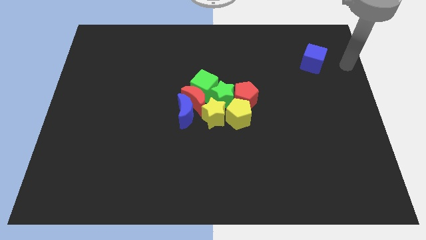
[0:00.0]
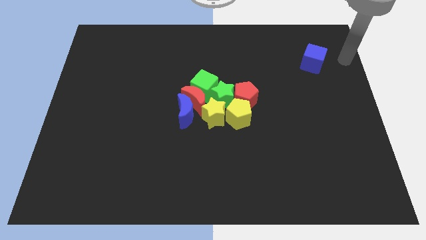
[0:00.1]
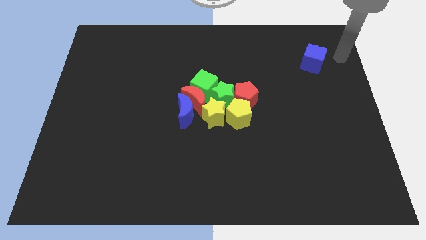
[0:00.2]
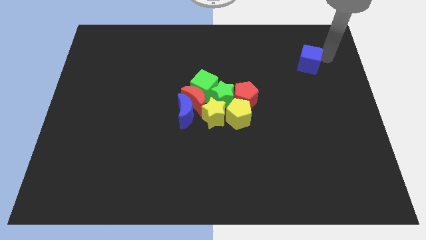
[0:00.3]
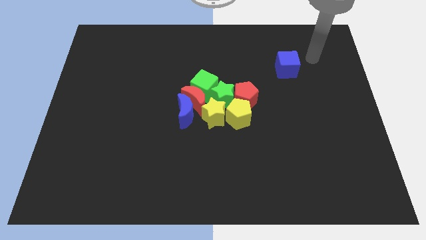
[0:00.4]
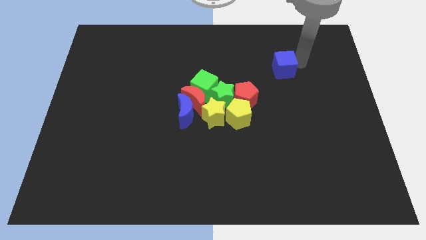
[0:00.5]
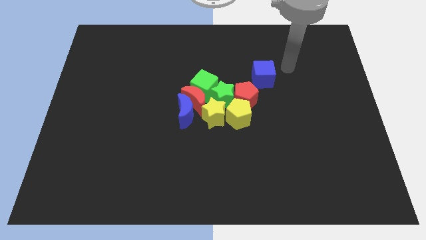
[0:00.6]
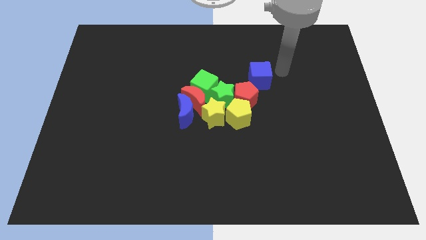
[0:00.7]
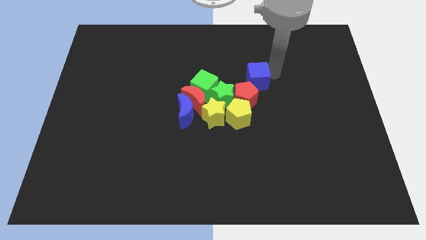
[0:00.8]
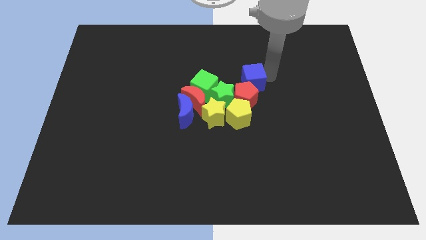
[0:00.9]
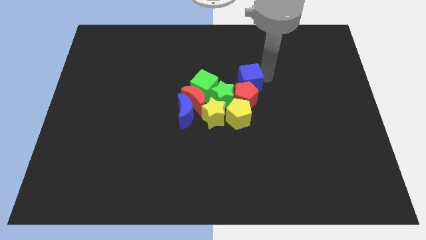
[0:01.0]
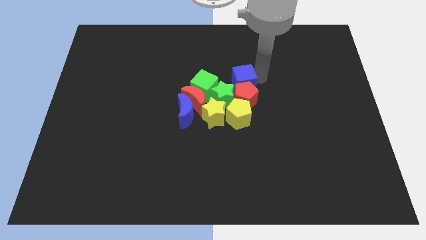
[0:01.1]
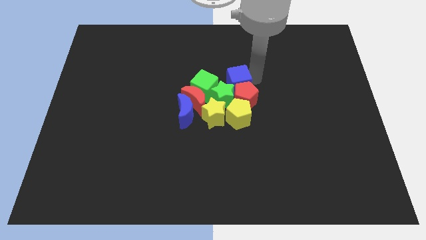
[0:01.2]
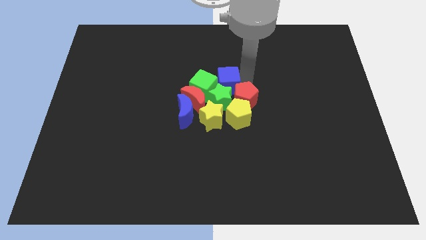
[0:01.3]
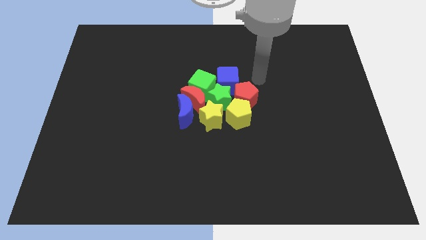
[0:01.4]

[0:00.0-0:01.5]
move the blue cube at the top side of the green star

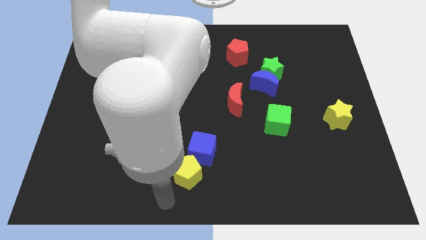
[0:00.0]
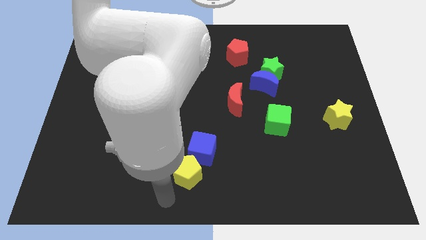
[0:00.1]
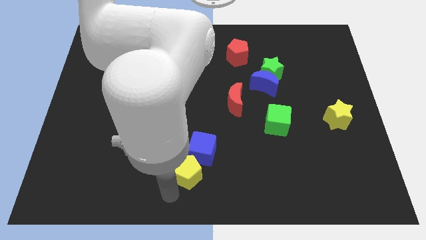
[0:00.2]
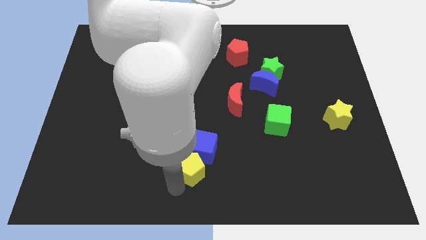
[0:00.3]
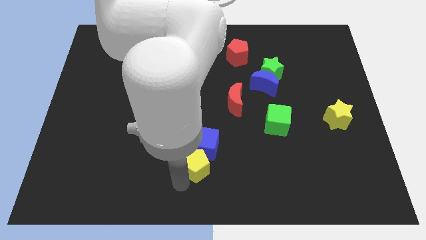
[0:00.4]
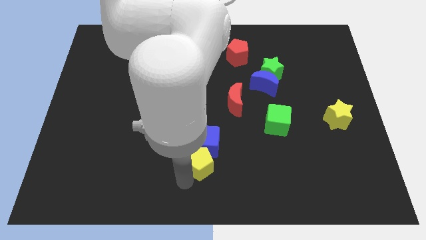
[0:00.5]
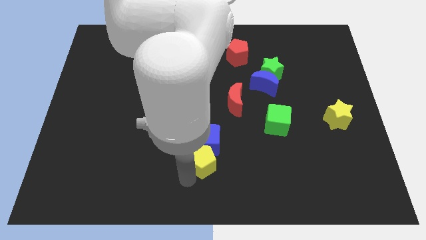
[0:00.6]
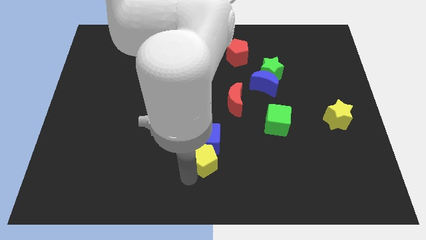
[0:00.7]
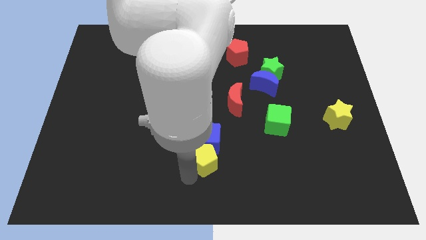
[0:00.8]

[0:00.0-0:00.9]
move the yellow pentagon into blue cube

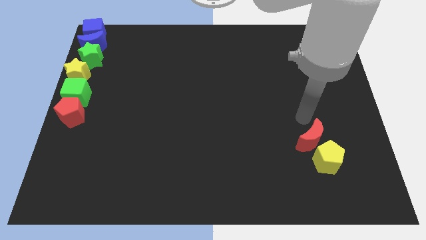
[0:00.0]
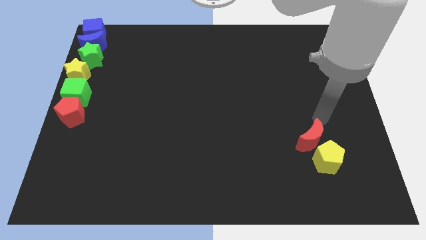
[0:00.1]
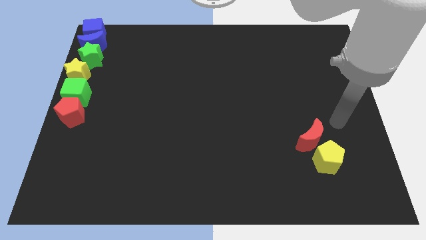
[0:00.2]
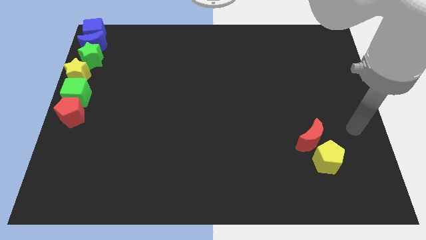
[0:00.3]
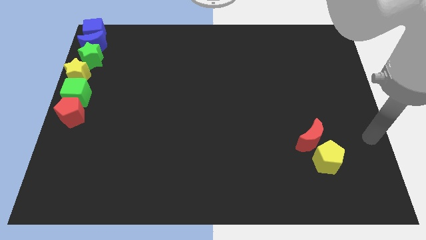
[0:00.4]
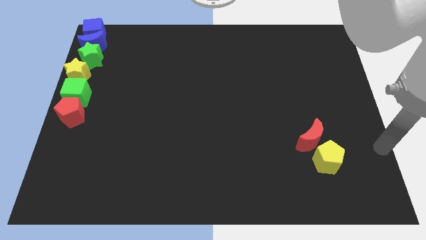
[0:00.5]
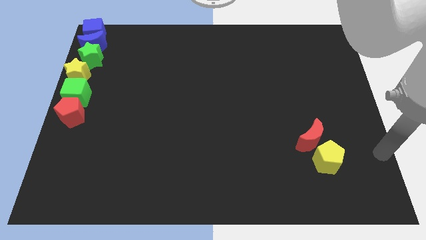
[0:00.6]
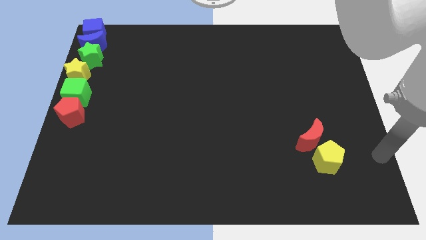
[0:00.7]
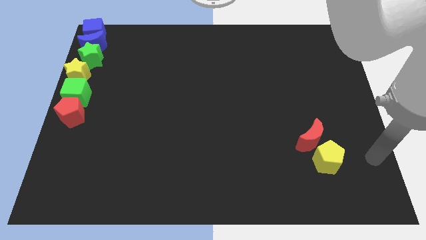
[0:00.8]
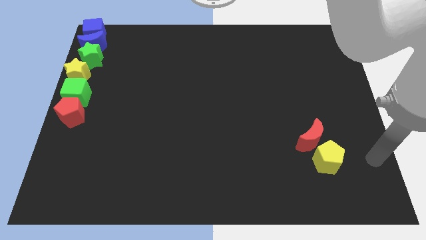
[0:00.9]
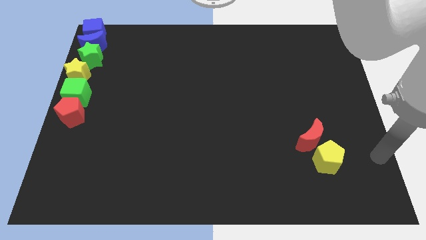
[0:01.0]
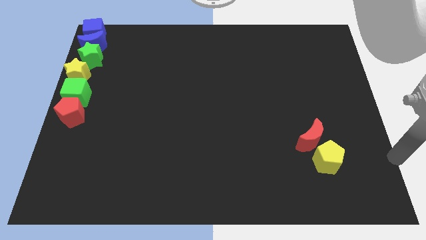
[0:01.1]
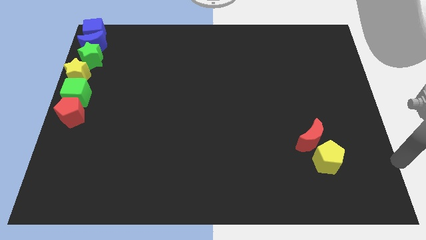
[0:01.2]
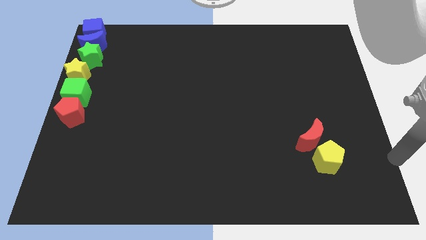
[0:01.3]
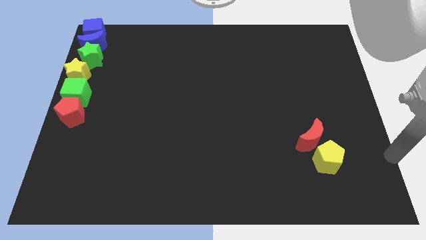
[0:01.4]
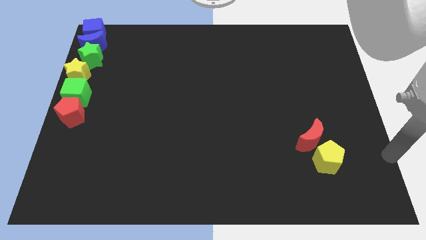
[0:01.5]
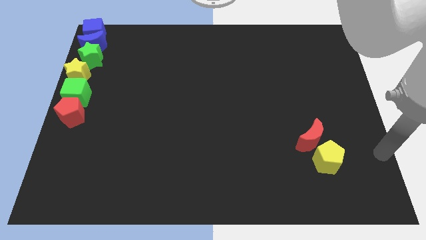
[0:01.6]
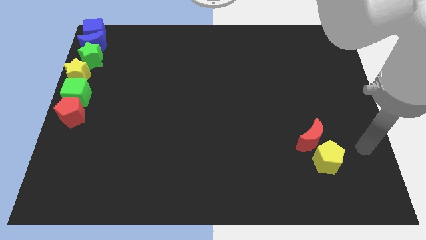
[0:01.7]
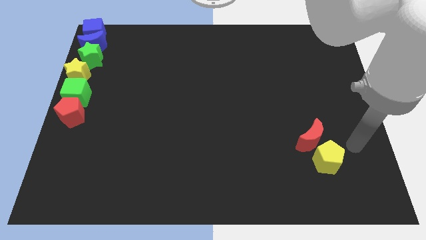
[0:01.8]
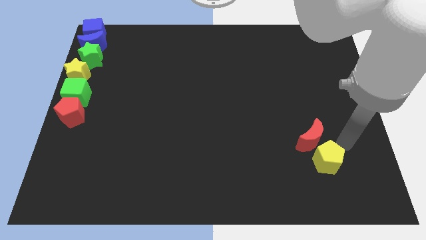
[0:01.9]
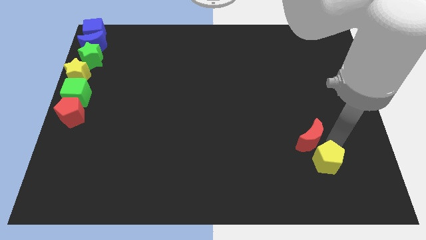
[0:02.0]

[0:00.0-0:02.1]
place your arm to the right side of red moon

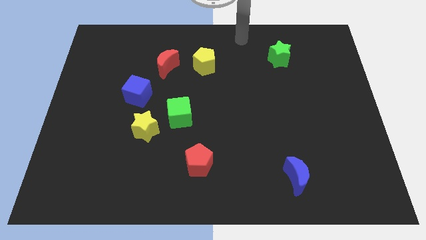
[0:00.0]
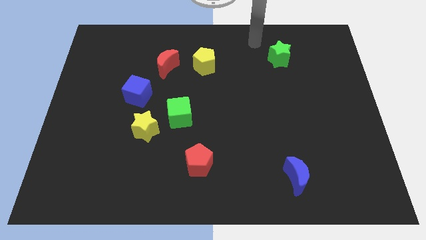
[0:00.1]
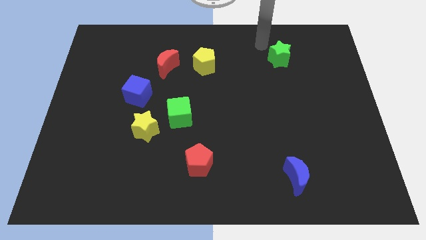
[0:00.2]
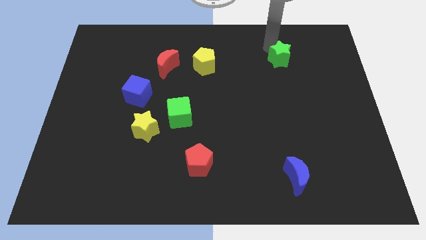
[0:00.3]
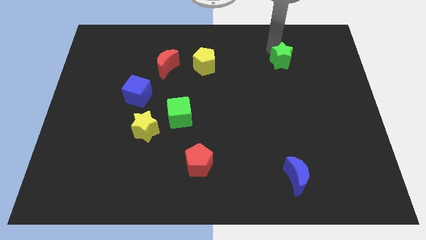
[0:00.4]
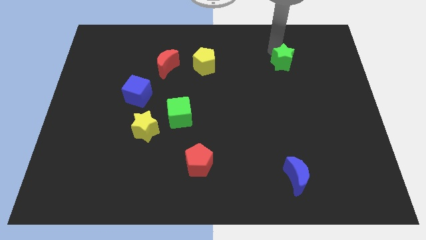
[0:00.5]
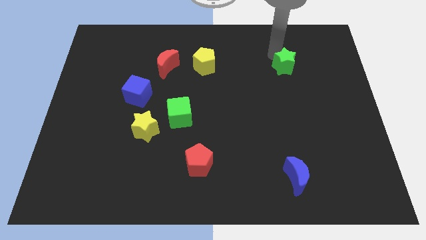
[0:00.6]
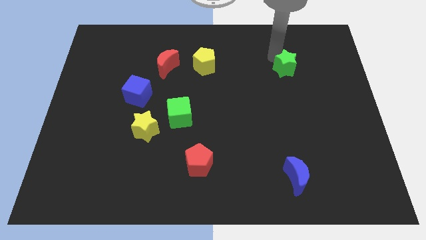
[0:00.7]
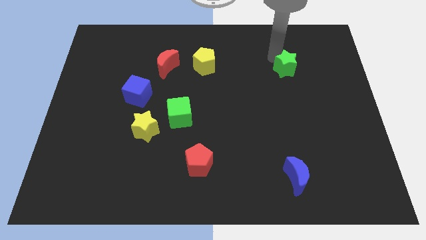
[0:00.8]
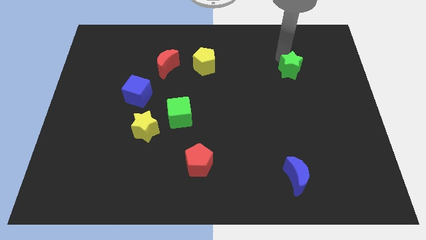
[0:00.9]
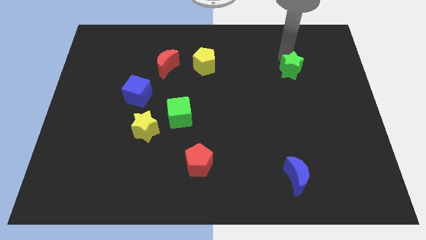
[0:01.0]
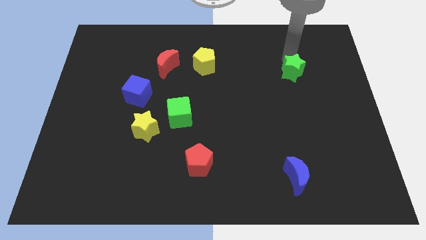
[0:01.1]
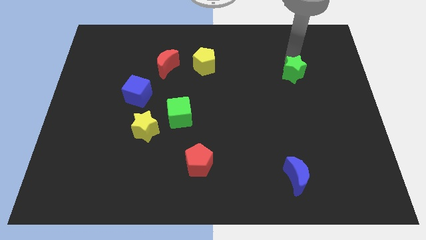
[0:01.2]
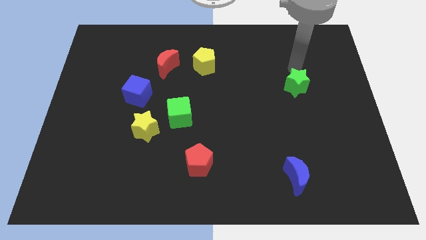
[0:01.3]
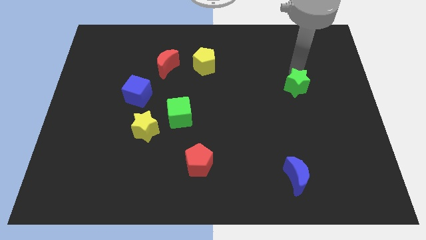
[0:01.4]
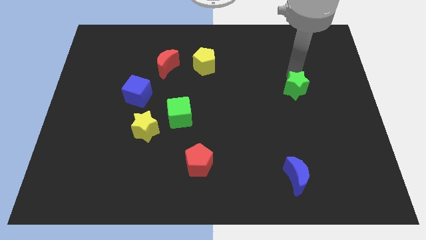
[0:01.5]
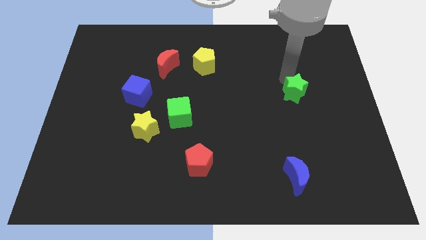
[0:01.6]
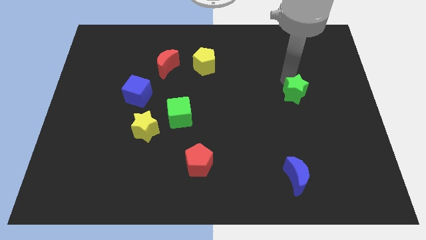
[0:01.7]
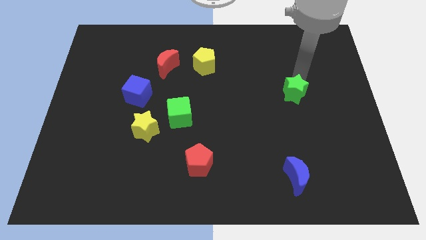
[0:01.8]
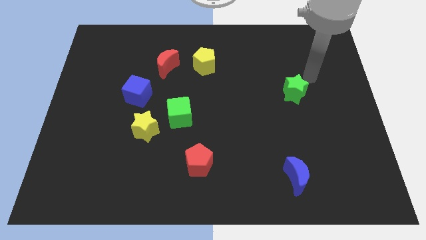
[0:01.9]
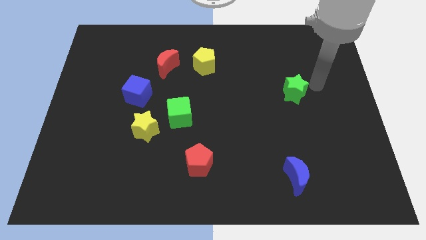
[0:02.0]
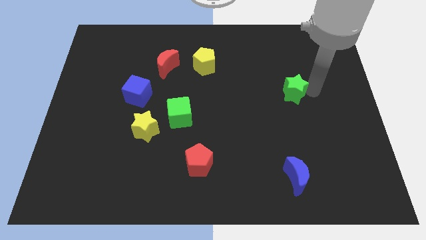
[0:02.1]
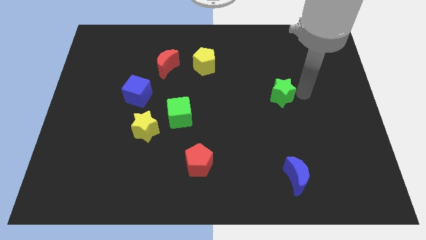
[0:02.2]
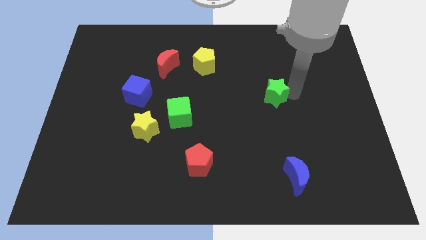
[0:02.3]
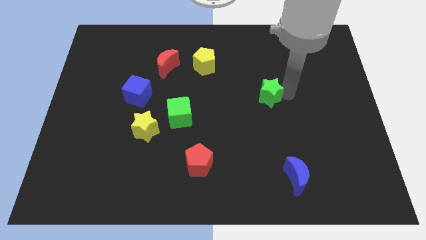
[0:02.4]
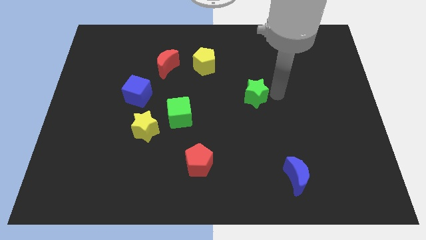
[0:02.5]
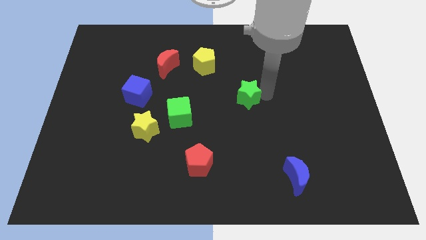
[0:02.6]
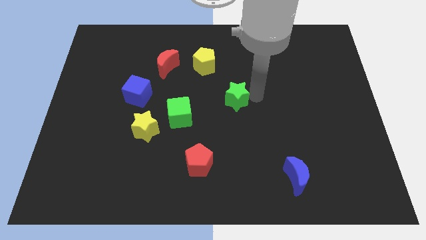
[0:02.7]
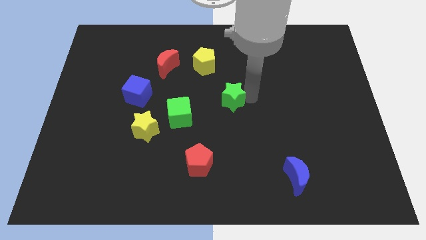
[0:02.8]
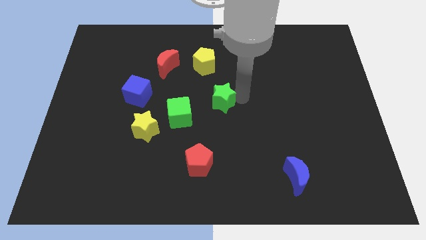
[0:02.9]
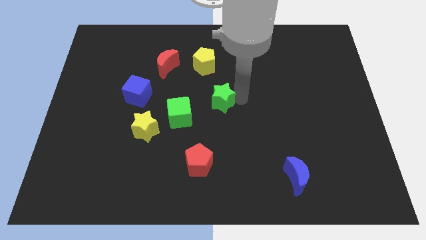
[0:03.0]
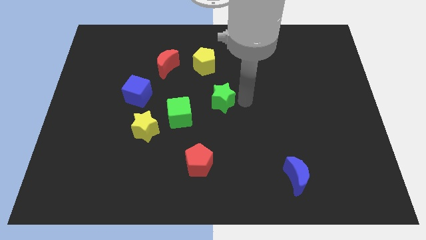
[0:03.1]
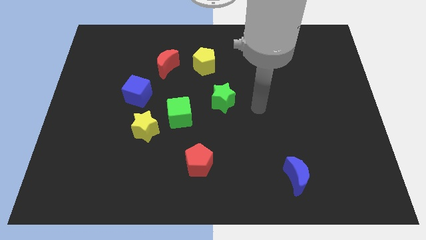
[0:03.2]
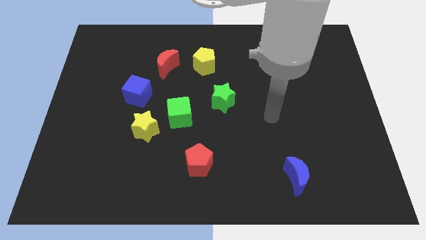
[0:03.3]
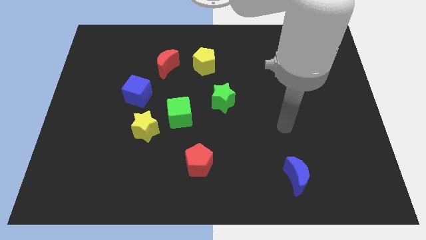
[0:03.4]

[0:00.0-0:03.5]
move green star diagonally bottom right to the yellow pentagon

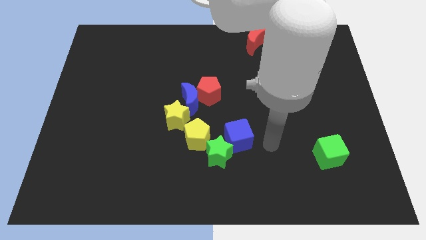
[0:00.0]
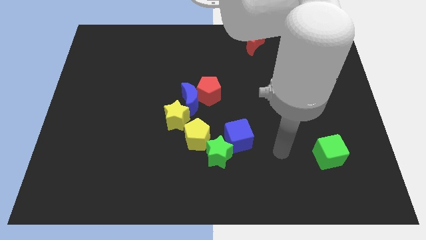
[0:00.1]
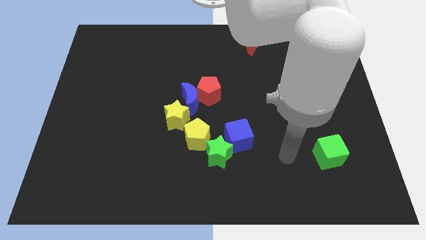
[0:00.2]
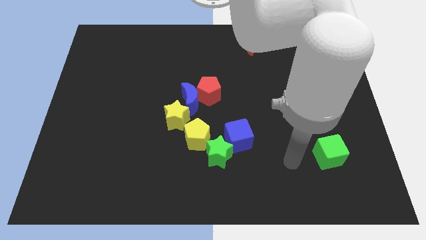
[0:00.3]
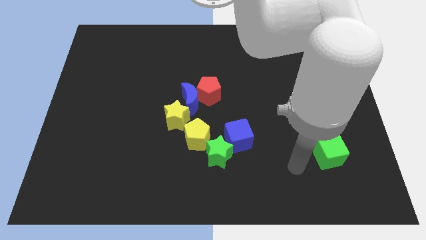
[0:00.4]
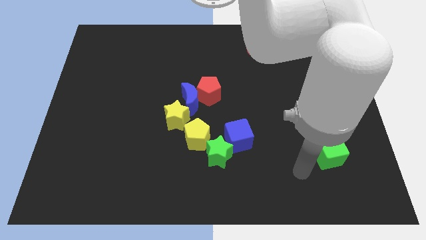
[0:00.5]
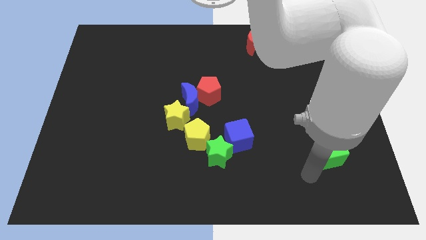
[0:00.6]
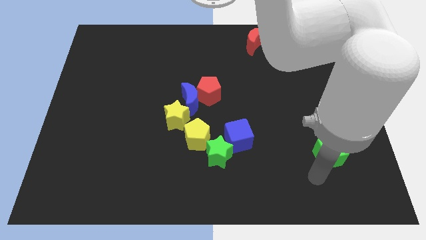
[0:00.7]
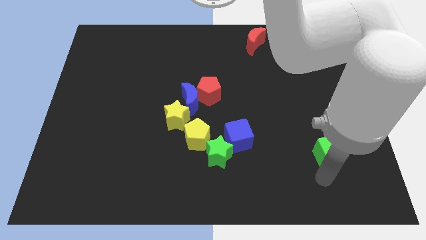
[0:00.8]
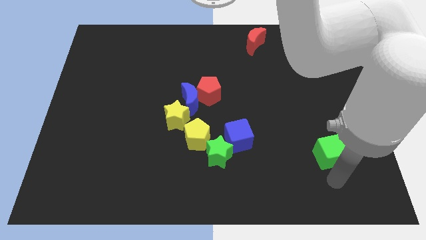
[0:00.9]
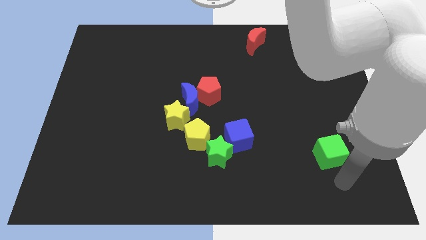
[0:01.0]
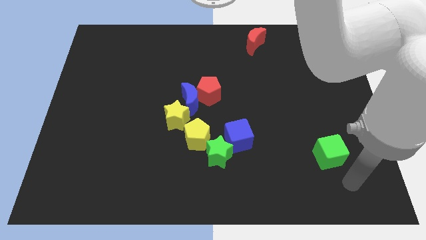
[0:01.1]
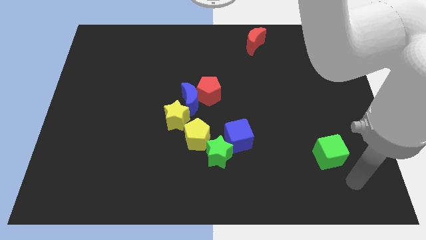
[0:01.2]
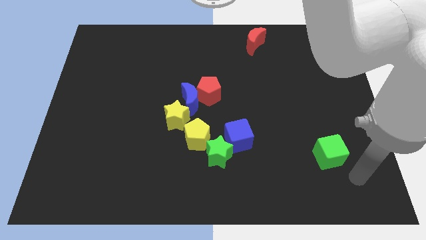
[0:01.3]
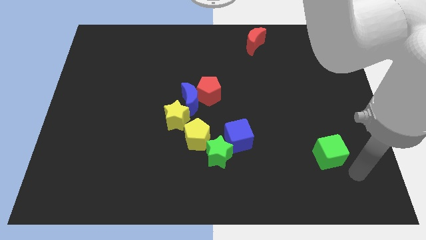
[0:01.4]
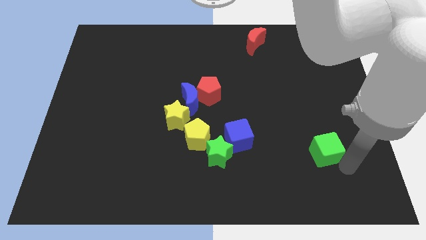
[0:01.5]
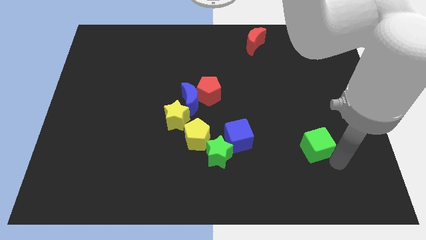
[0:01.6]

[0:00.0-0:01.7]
move the arm towards the green cube
